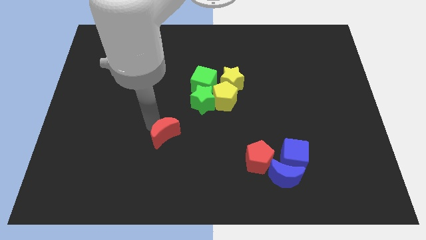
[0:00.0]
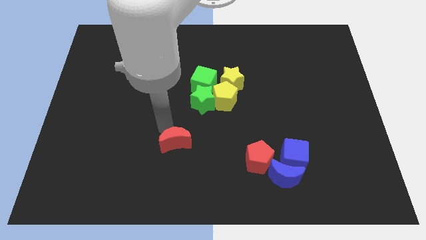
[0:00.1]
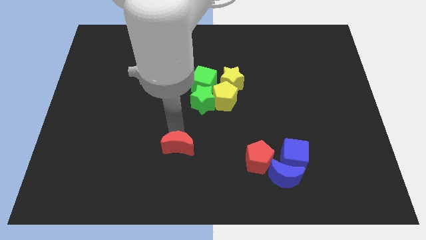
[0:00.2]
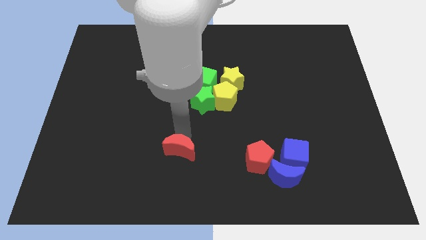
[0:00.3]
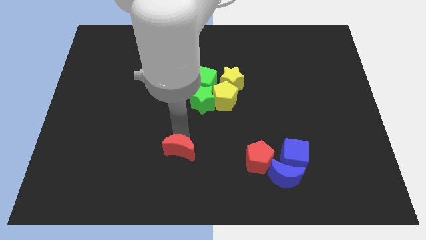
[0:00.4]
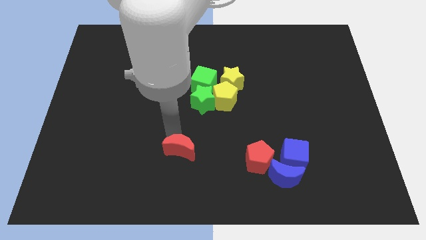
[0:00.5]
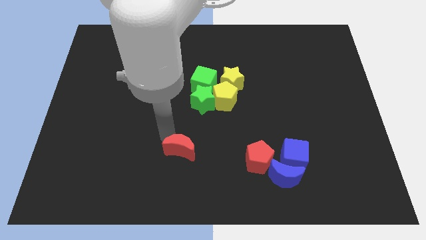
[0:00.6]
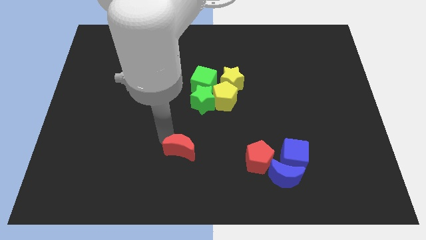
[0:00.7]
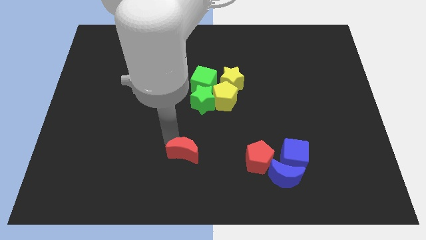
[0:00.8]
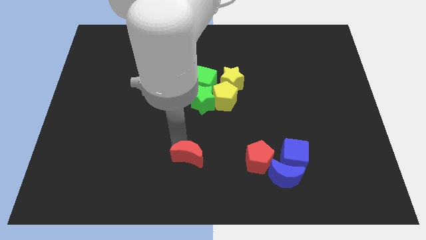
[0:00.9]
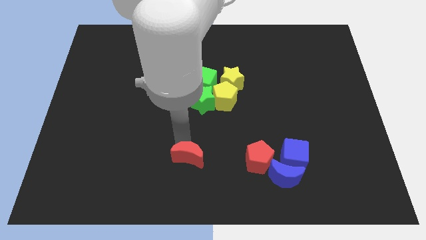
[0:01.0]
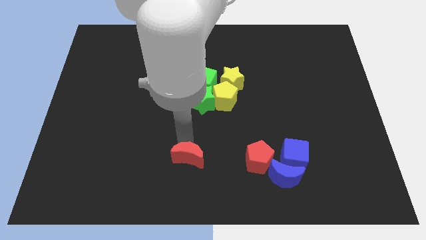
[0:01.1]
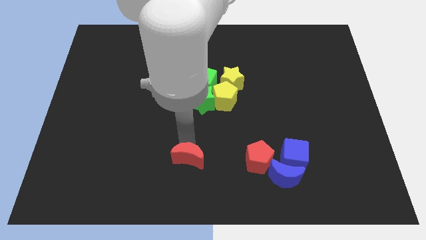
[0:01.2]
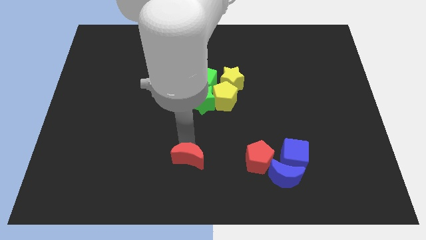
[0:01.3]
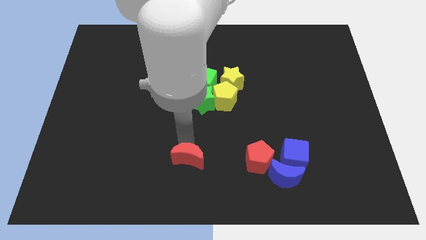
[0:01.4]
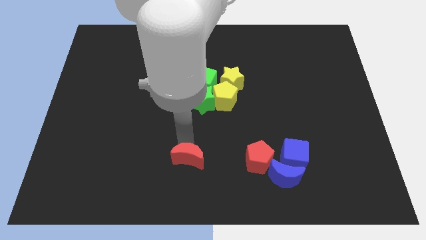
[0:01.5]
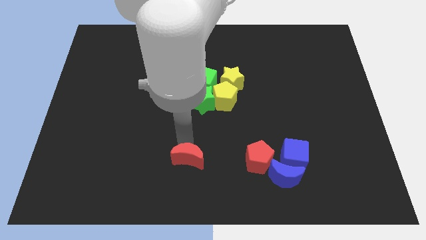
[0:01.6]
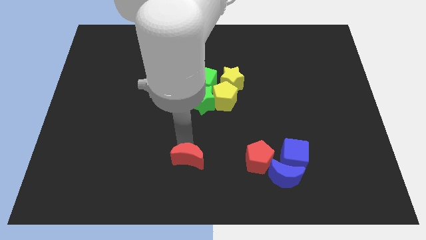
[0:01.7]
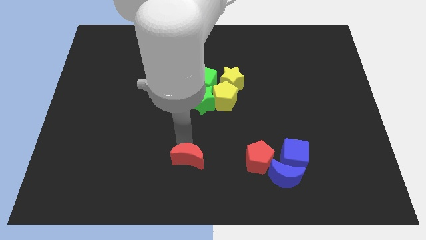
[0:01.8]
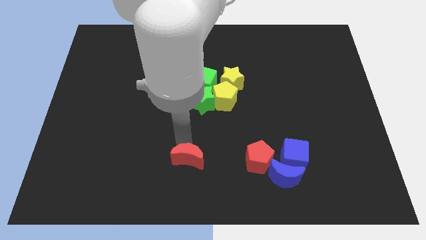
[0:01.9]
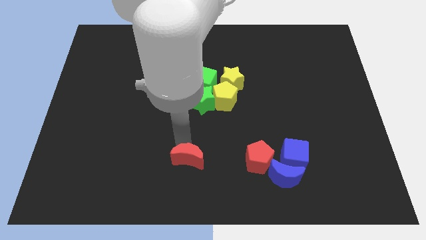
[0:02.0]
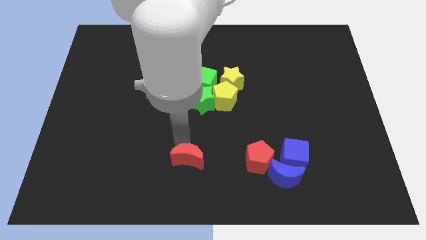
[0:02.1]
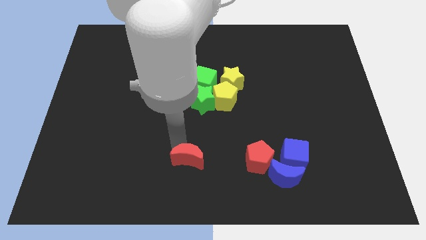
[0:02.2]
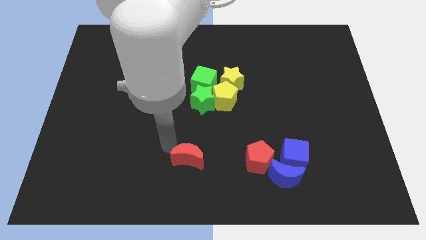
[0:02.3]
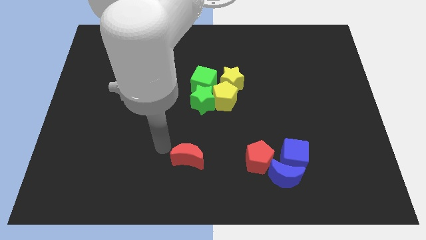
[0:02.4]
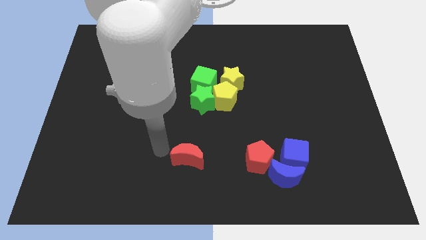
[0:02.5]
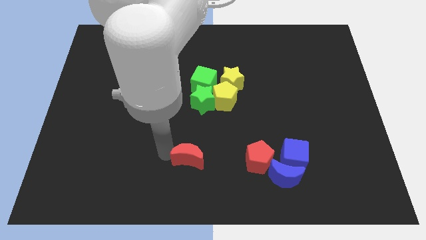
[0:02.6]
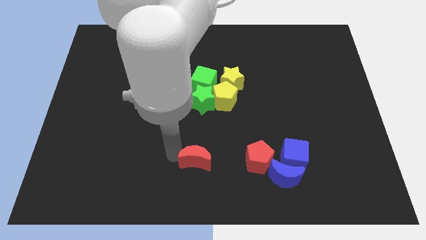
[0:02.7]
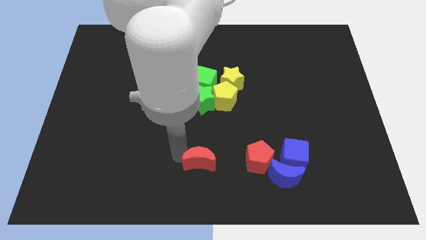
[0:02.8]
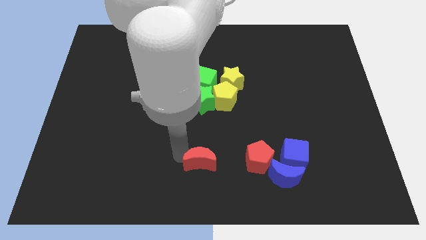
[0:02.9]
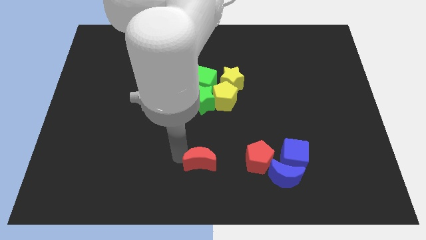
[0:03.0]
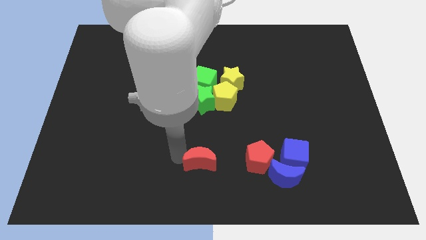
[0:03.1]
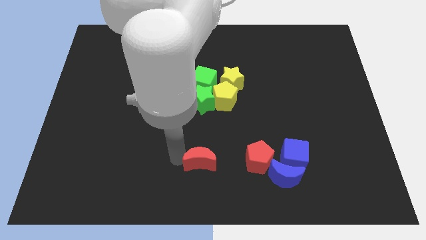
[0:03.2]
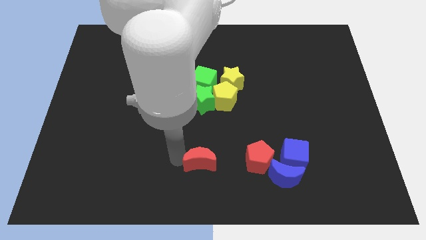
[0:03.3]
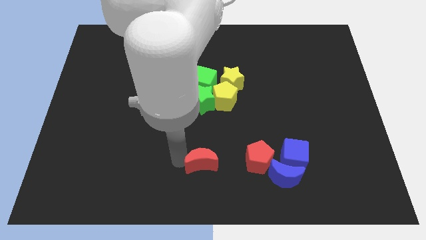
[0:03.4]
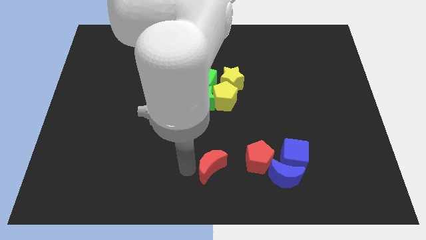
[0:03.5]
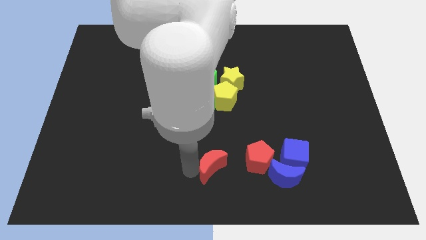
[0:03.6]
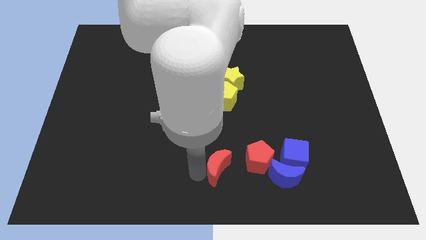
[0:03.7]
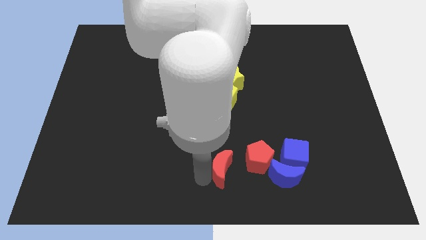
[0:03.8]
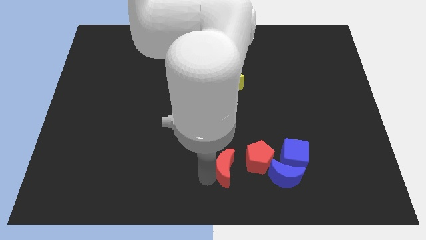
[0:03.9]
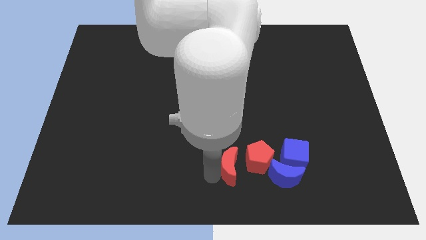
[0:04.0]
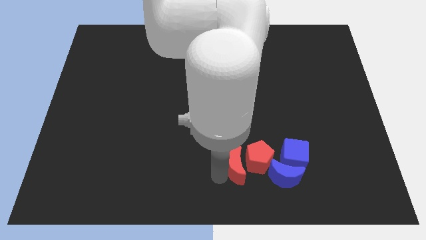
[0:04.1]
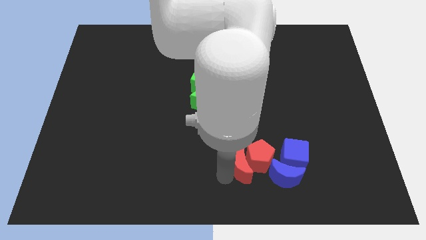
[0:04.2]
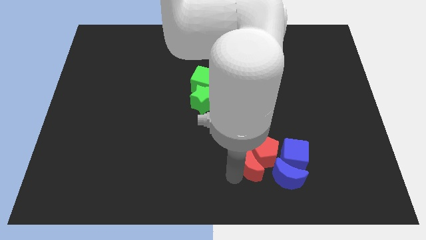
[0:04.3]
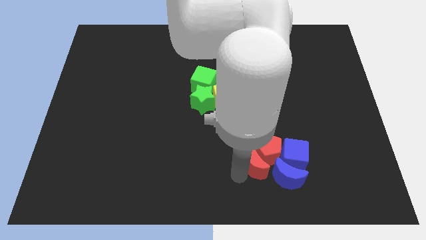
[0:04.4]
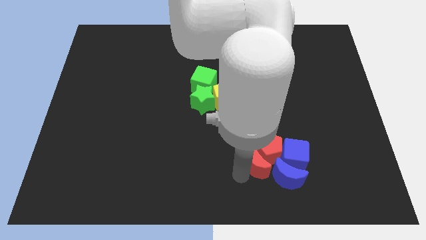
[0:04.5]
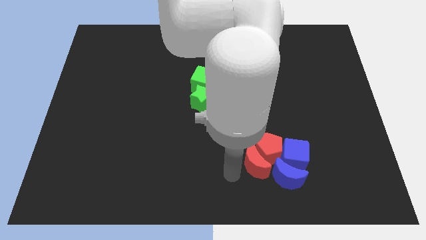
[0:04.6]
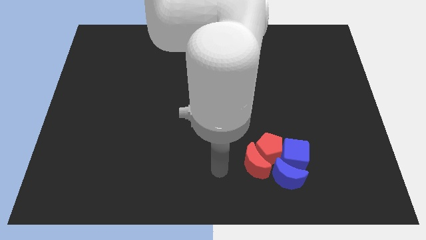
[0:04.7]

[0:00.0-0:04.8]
put the red crescent into the red pentagon

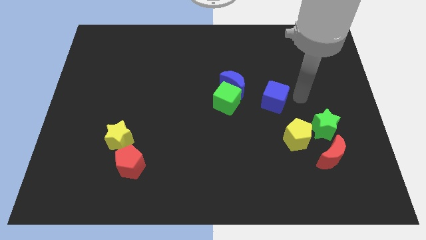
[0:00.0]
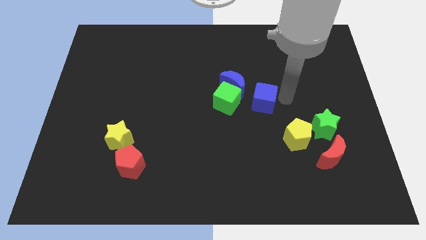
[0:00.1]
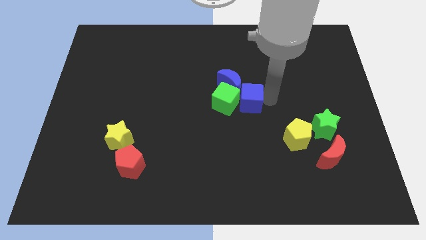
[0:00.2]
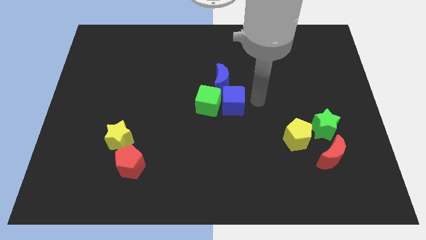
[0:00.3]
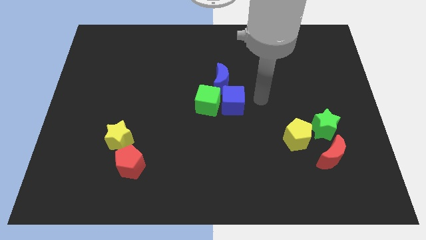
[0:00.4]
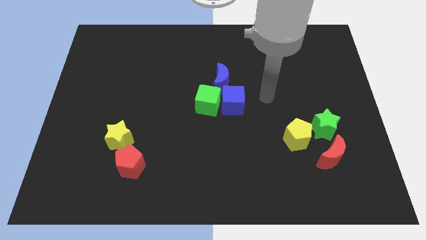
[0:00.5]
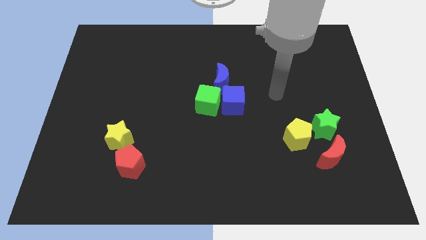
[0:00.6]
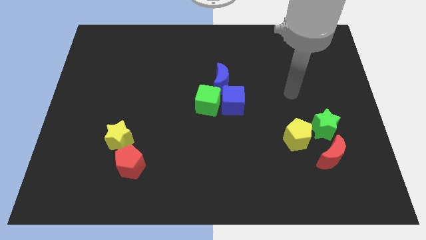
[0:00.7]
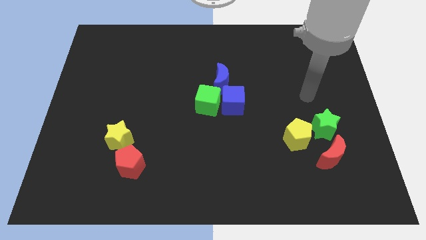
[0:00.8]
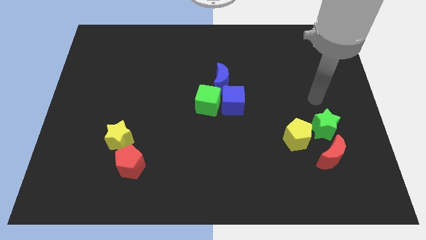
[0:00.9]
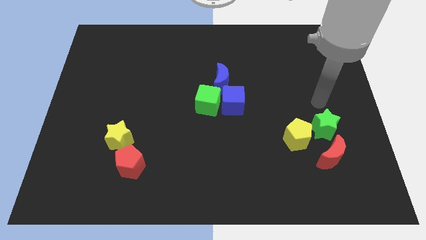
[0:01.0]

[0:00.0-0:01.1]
slide blue cube into green cube

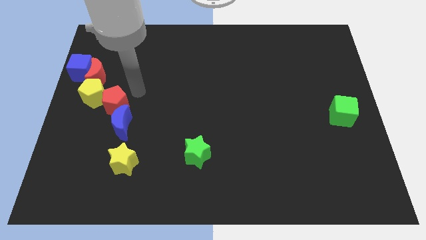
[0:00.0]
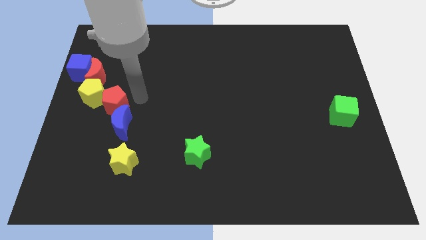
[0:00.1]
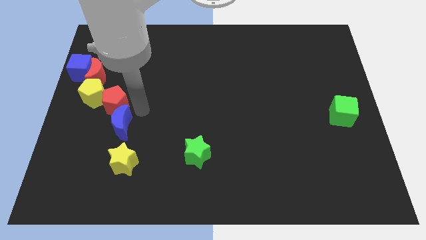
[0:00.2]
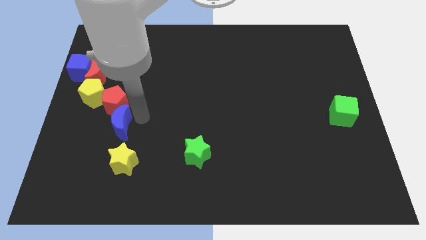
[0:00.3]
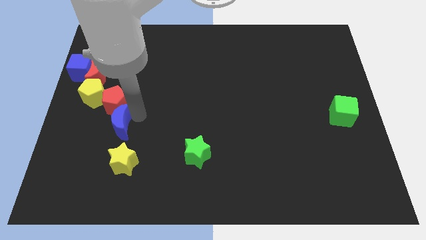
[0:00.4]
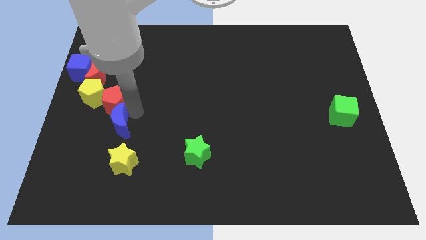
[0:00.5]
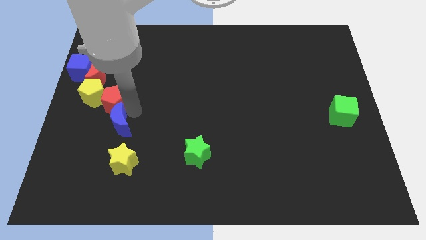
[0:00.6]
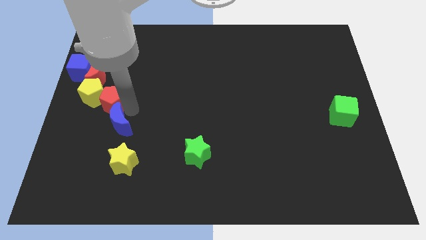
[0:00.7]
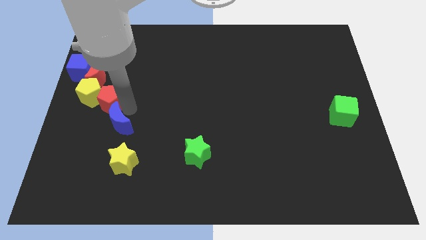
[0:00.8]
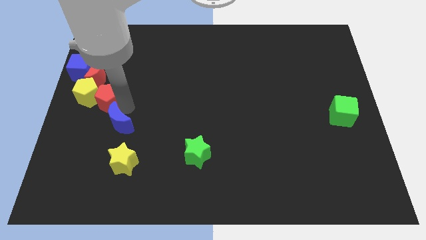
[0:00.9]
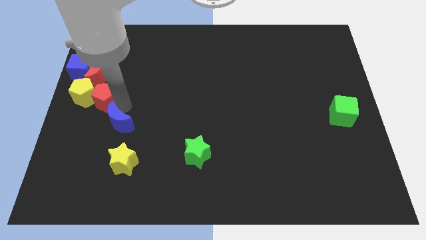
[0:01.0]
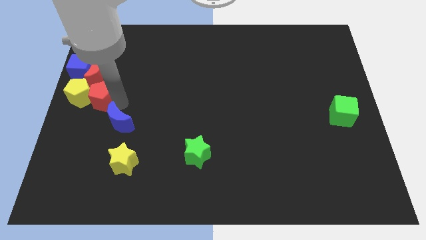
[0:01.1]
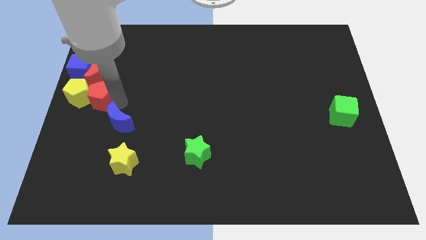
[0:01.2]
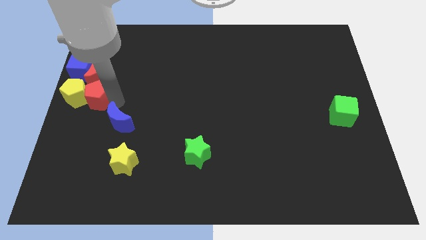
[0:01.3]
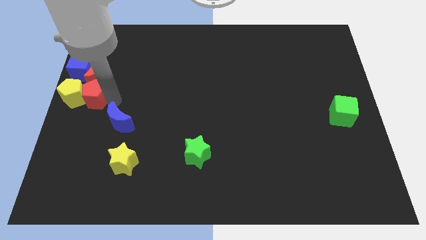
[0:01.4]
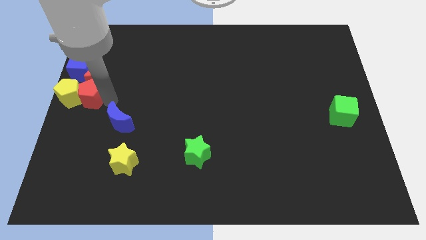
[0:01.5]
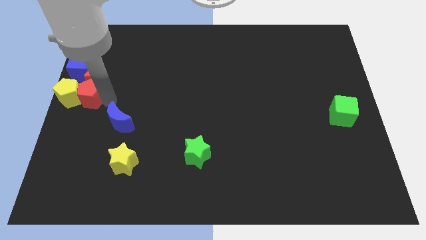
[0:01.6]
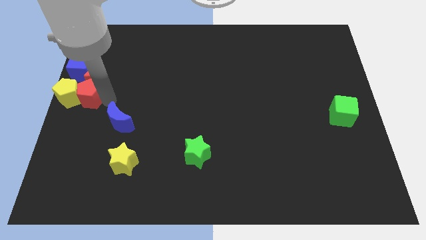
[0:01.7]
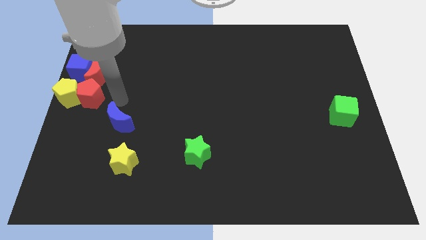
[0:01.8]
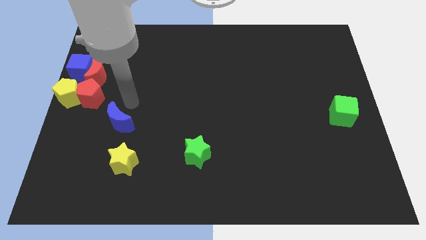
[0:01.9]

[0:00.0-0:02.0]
push the red and yellow pentagons to the left side

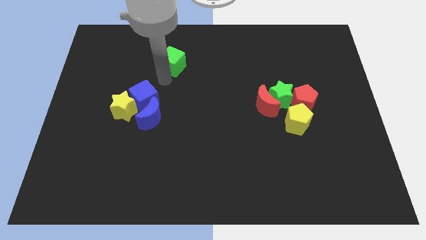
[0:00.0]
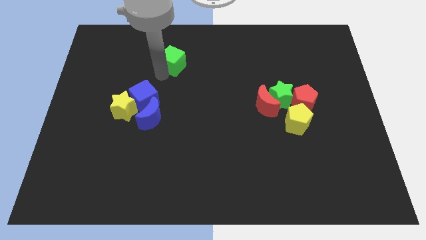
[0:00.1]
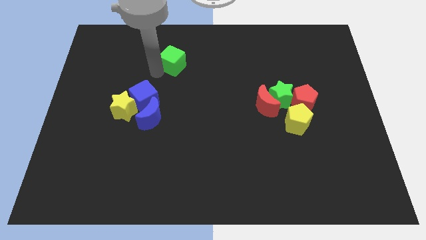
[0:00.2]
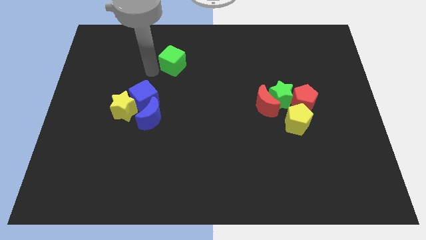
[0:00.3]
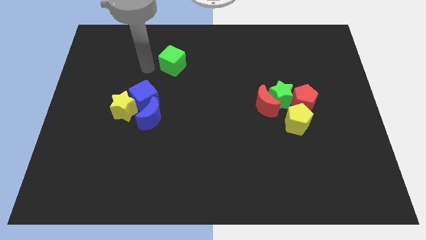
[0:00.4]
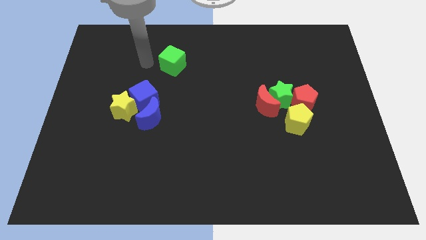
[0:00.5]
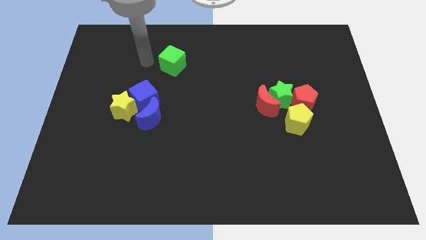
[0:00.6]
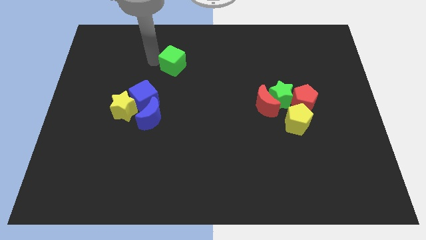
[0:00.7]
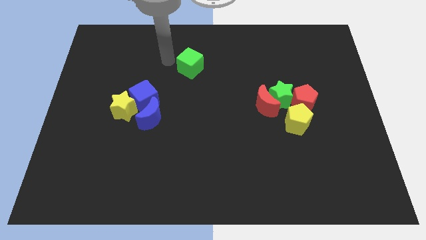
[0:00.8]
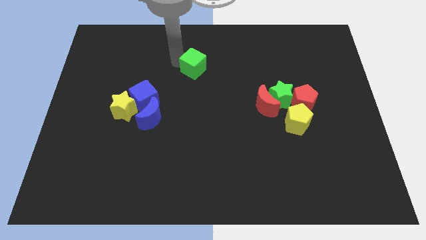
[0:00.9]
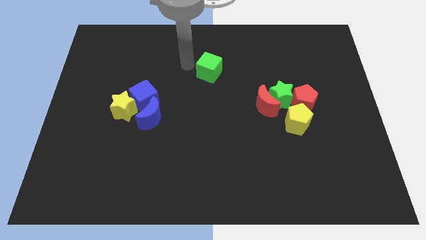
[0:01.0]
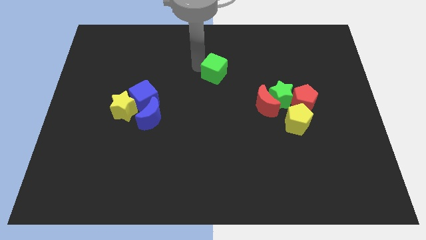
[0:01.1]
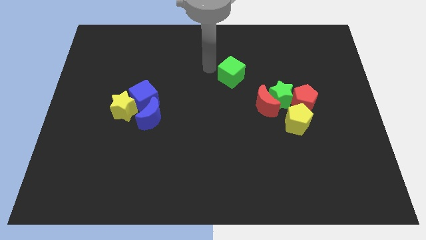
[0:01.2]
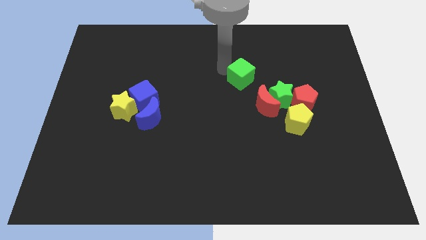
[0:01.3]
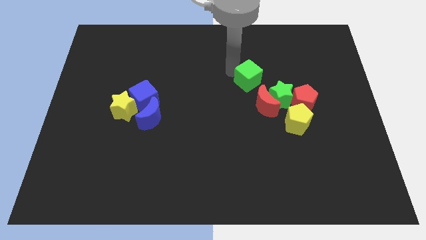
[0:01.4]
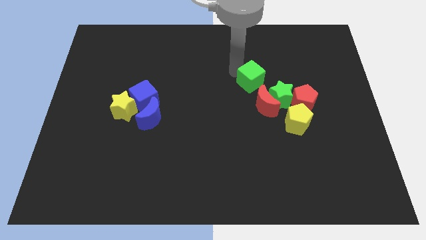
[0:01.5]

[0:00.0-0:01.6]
slide the green cube towards the right side of the board
